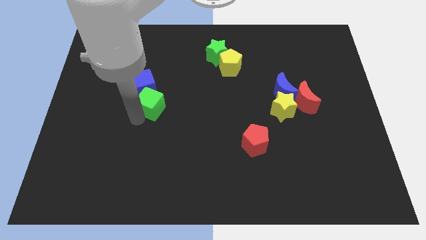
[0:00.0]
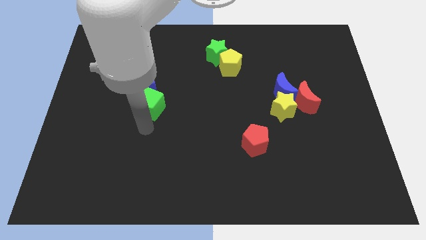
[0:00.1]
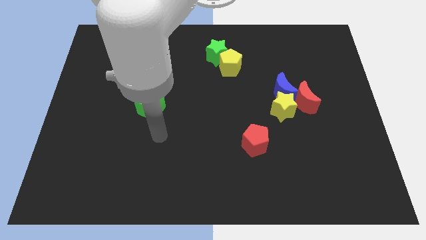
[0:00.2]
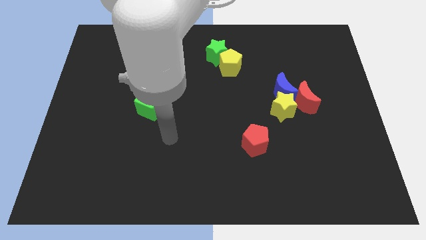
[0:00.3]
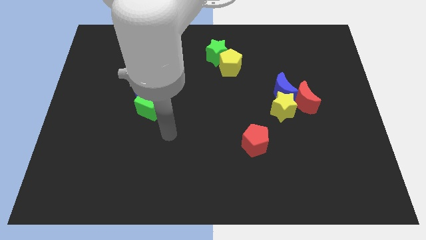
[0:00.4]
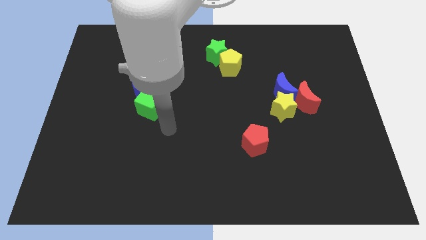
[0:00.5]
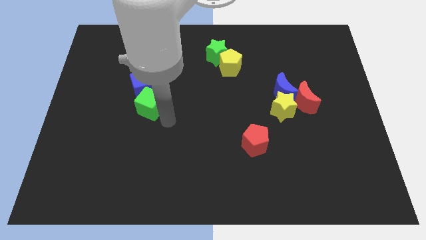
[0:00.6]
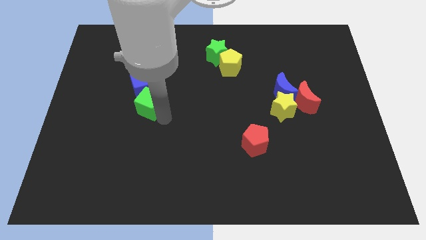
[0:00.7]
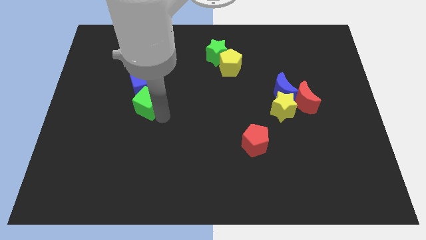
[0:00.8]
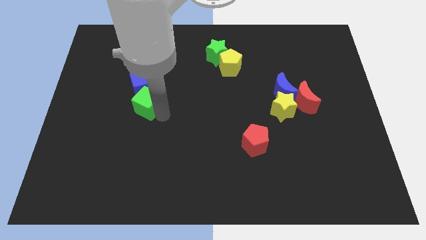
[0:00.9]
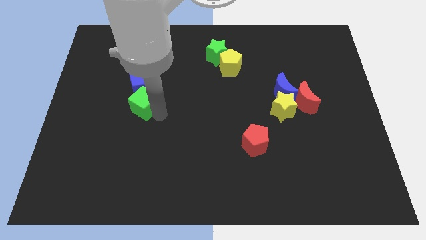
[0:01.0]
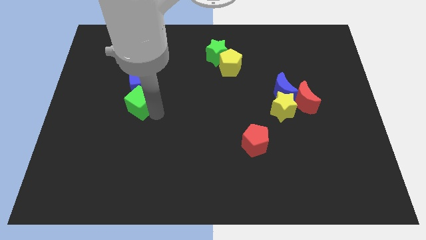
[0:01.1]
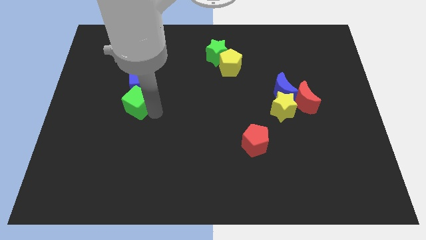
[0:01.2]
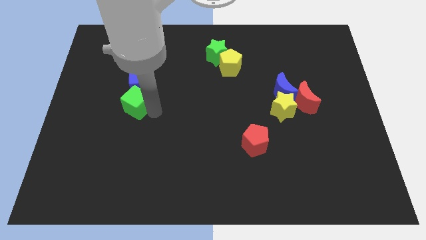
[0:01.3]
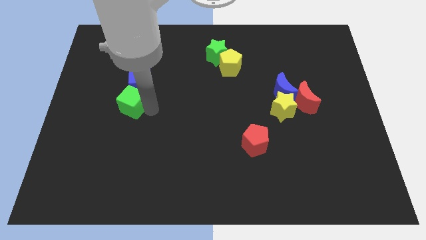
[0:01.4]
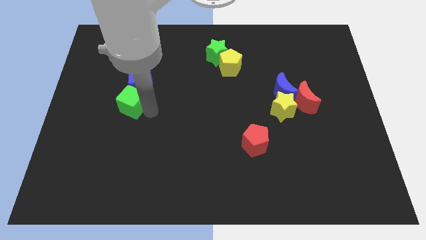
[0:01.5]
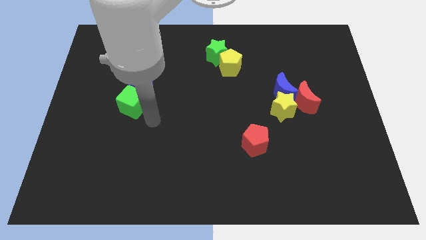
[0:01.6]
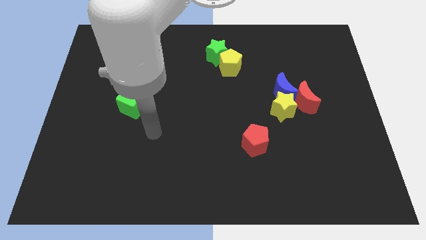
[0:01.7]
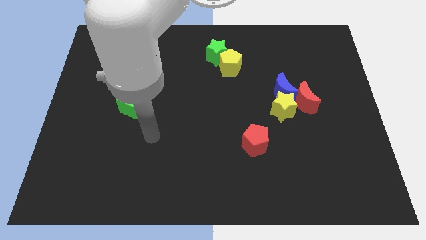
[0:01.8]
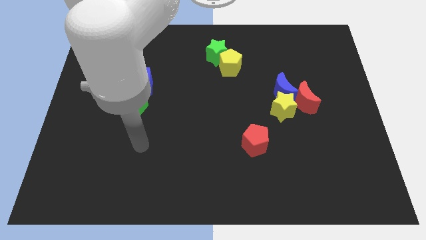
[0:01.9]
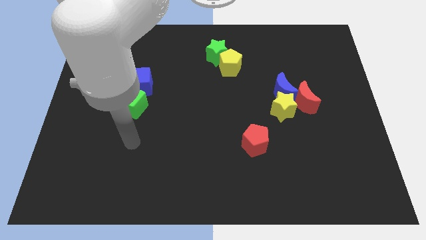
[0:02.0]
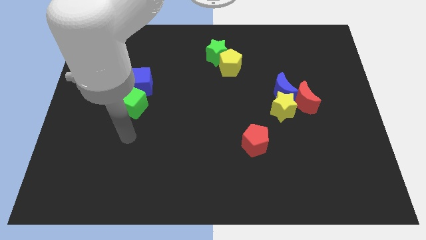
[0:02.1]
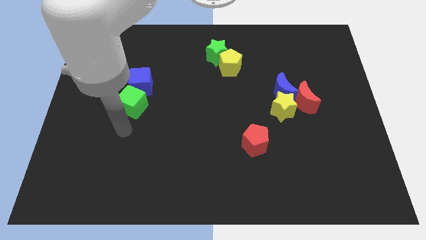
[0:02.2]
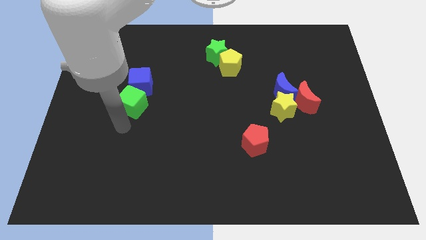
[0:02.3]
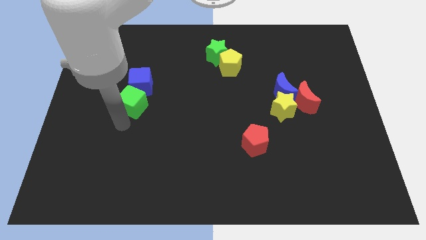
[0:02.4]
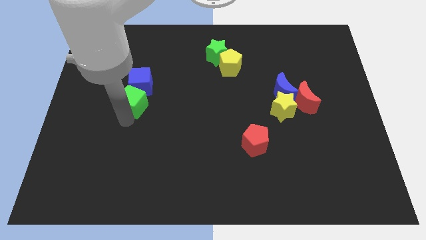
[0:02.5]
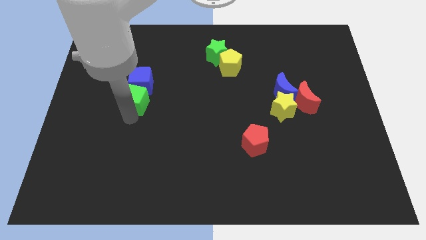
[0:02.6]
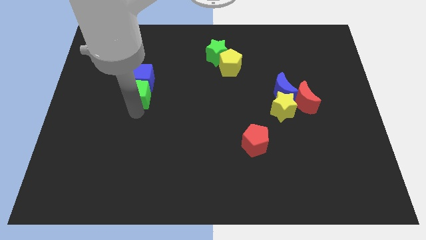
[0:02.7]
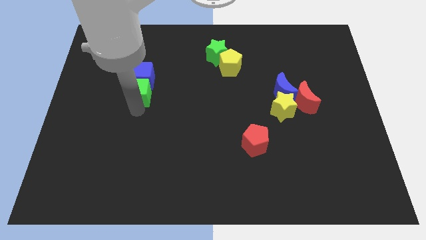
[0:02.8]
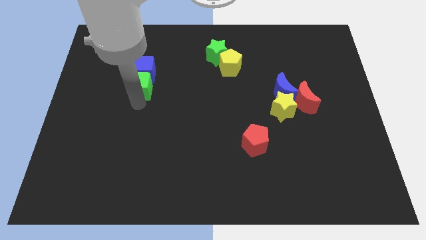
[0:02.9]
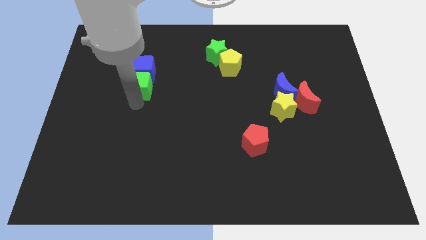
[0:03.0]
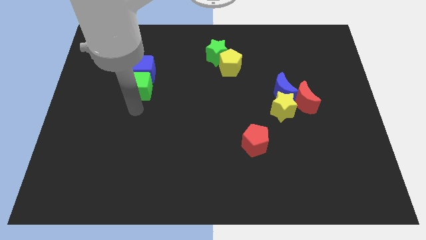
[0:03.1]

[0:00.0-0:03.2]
push the green cube and blue cube slightly upwards

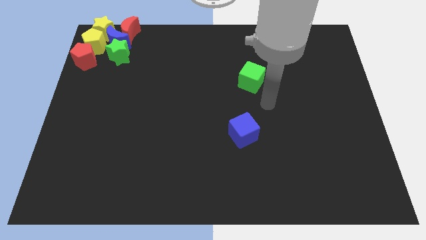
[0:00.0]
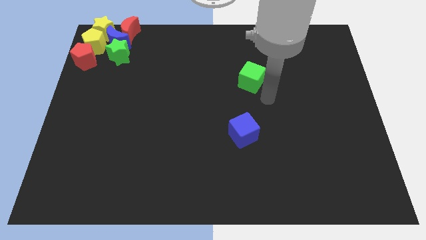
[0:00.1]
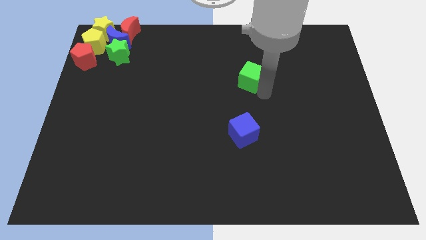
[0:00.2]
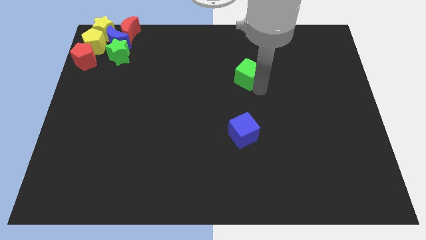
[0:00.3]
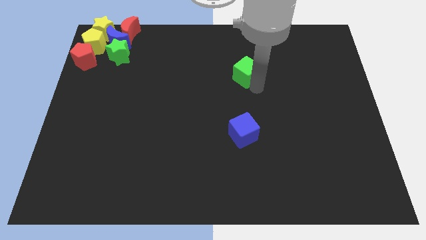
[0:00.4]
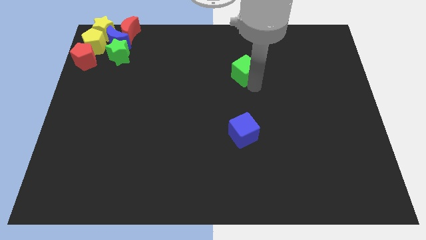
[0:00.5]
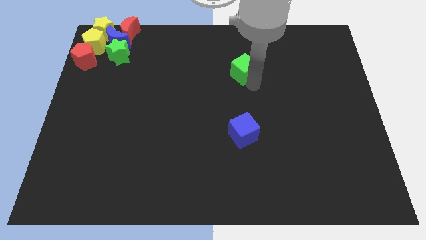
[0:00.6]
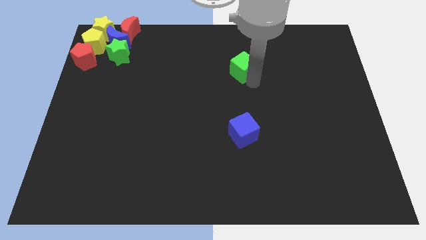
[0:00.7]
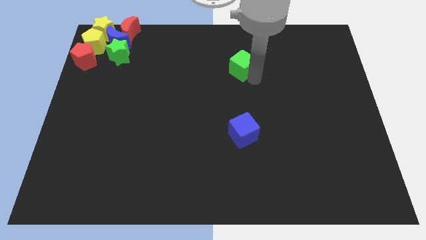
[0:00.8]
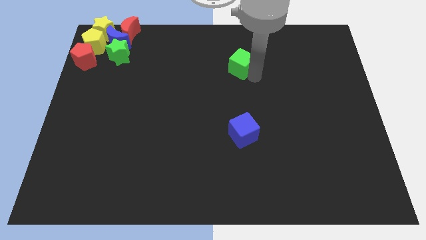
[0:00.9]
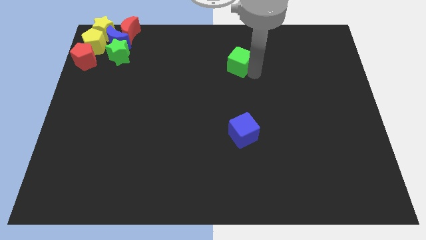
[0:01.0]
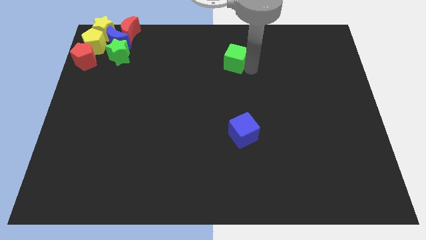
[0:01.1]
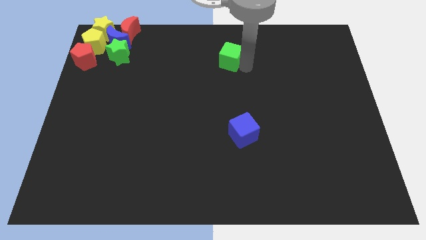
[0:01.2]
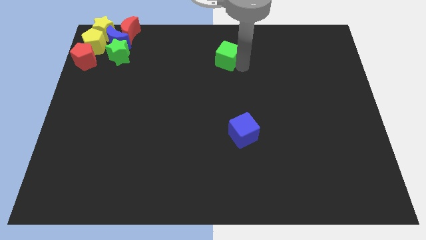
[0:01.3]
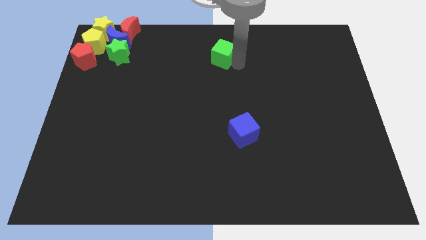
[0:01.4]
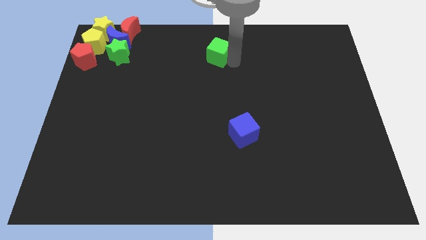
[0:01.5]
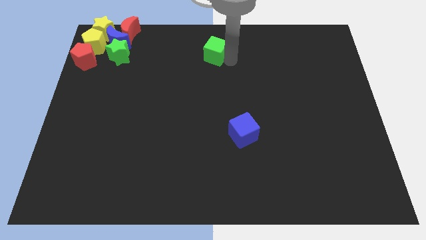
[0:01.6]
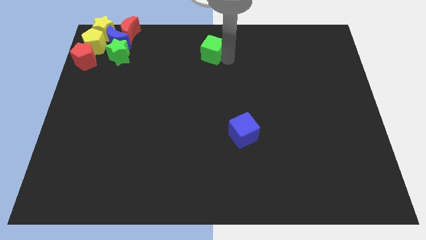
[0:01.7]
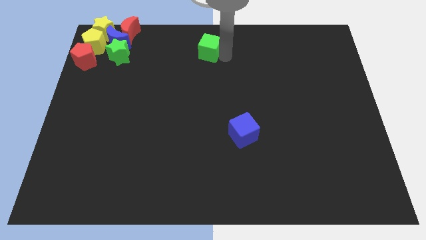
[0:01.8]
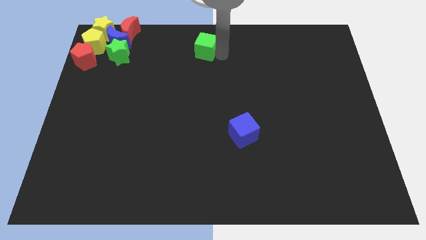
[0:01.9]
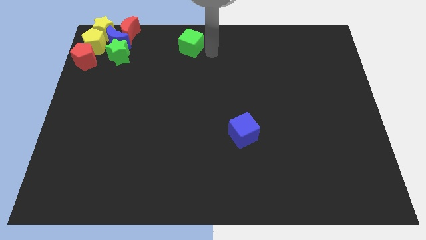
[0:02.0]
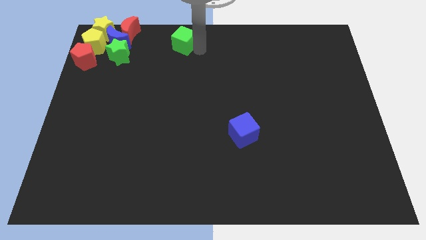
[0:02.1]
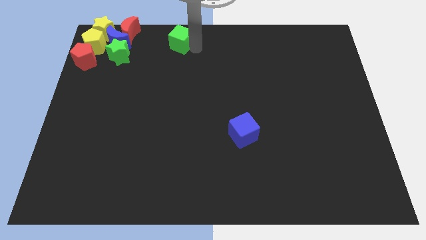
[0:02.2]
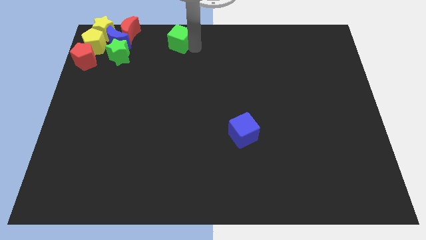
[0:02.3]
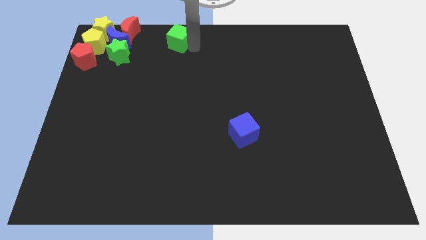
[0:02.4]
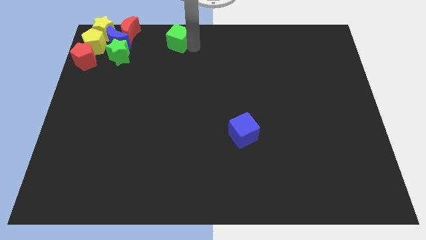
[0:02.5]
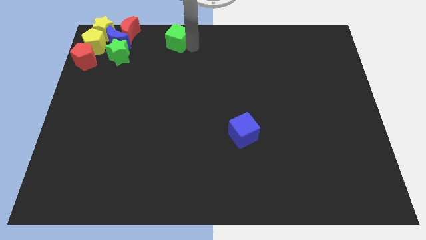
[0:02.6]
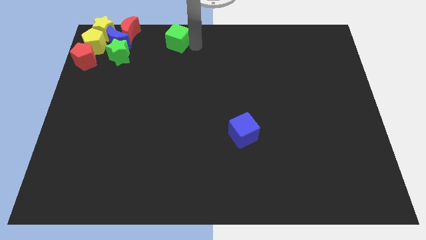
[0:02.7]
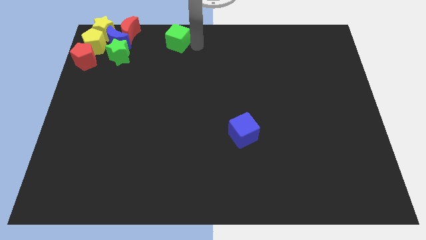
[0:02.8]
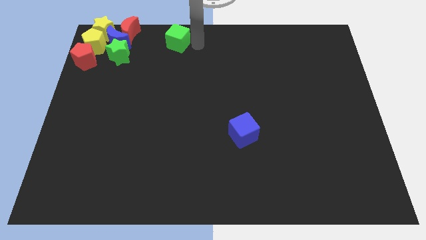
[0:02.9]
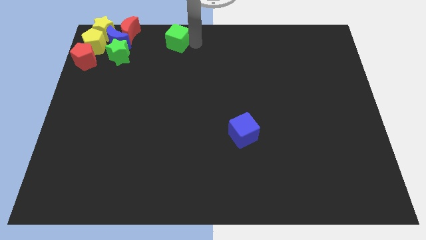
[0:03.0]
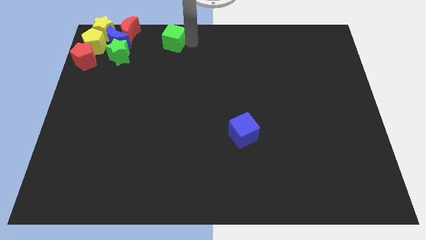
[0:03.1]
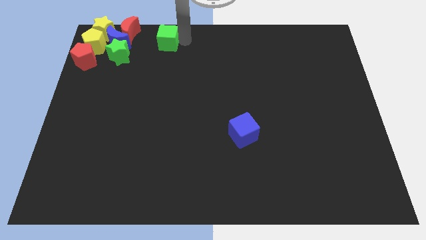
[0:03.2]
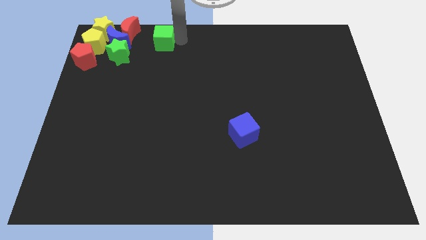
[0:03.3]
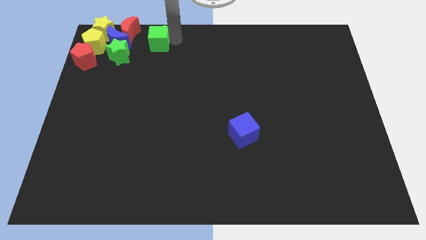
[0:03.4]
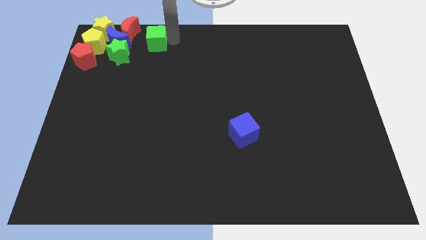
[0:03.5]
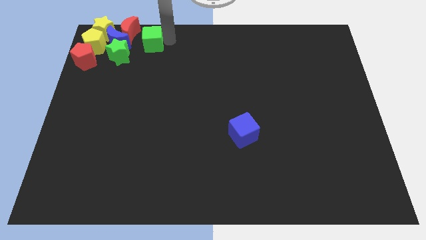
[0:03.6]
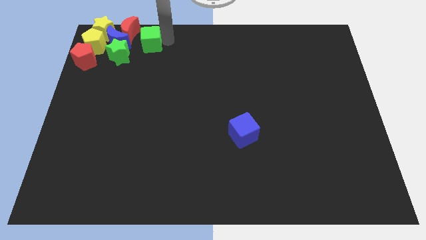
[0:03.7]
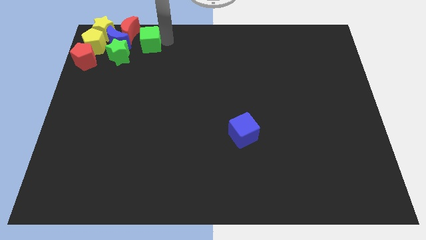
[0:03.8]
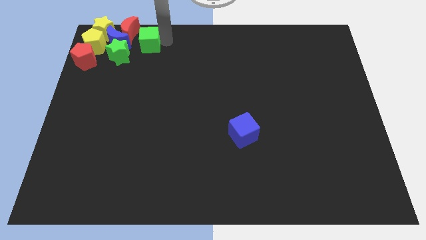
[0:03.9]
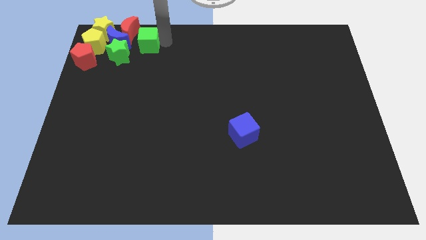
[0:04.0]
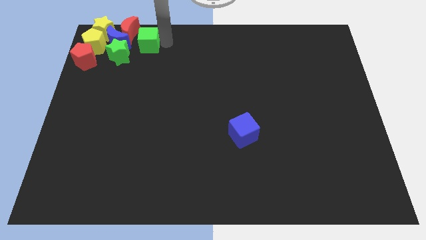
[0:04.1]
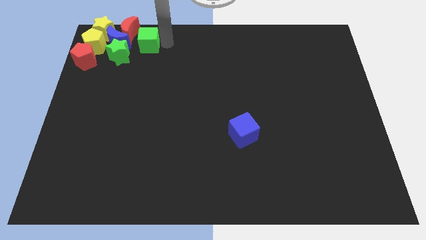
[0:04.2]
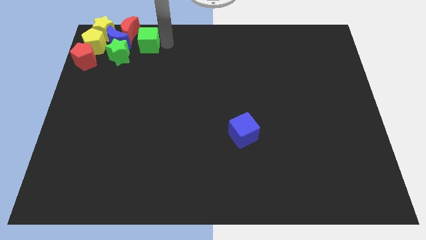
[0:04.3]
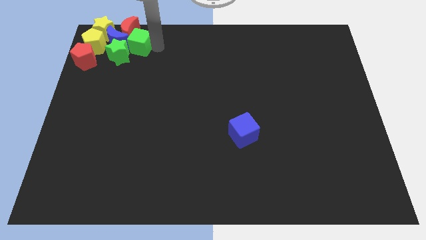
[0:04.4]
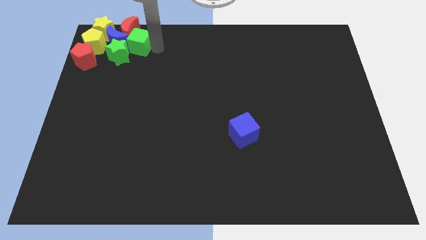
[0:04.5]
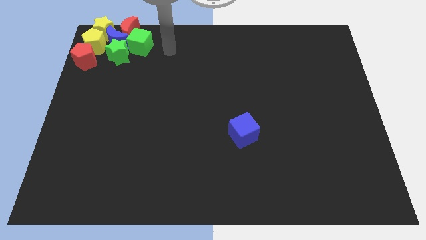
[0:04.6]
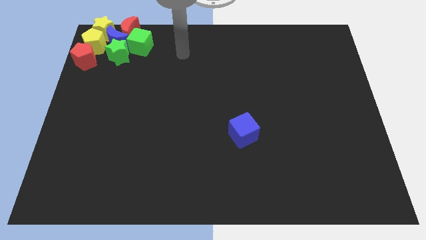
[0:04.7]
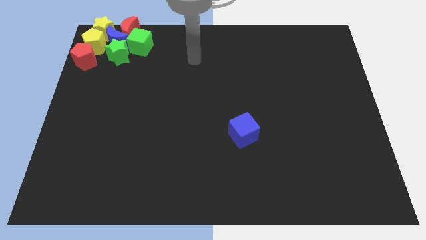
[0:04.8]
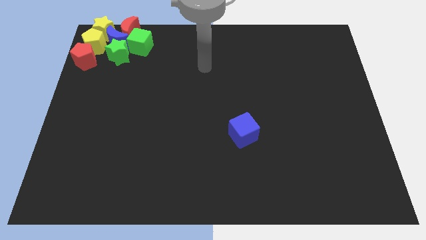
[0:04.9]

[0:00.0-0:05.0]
move the green cube to the right side of the blue moon

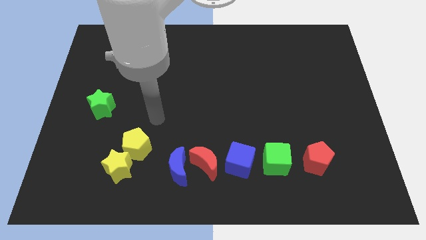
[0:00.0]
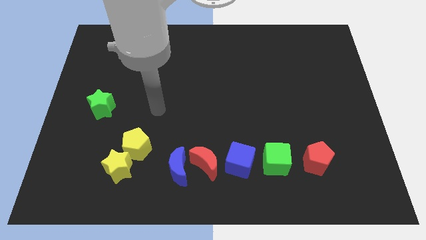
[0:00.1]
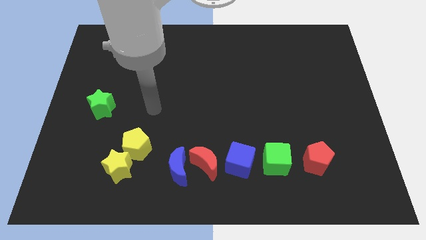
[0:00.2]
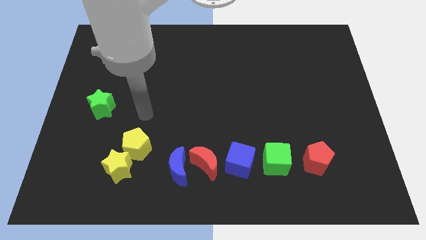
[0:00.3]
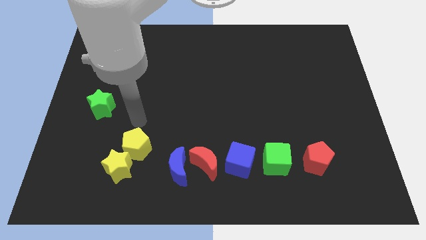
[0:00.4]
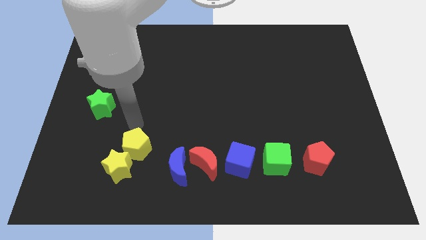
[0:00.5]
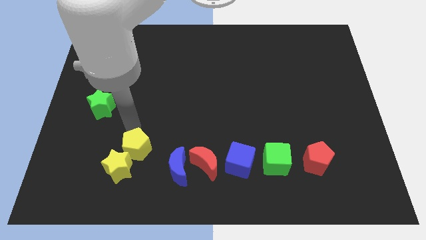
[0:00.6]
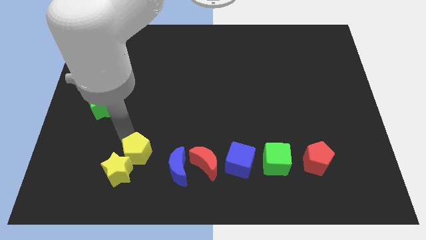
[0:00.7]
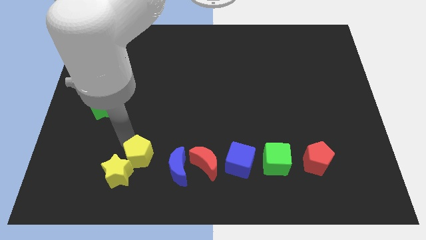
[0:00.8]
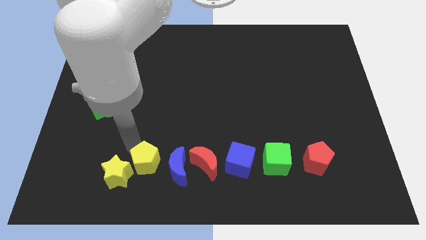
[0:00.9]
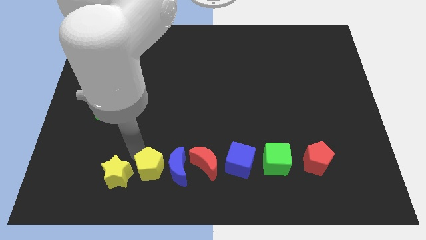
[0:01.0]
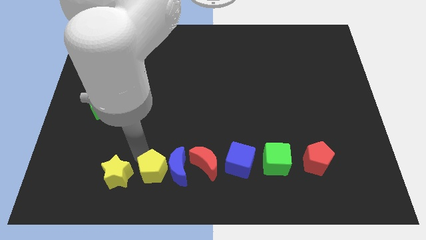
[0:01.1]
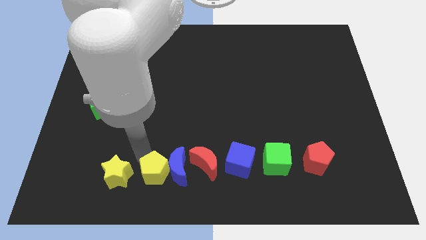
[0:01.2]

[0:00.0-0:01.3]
place the yellow pentagon to the left of the blue crescent
